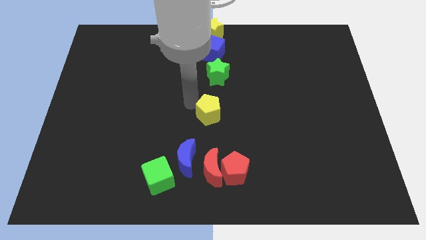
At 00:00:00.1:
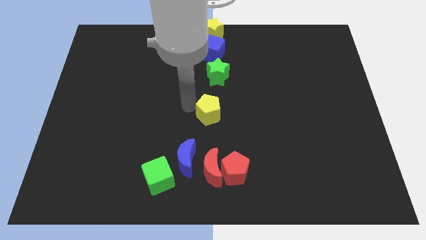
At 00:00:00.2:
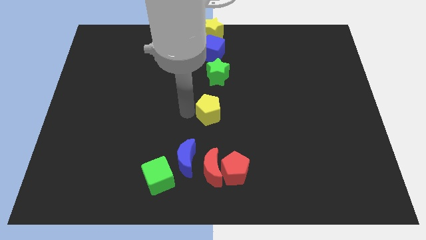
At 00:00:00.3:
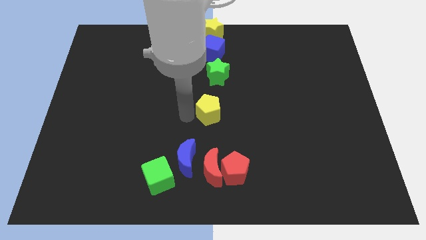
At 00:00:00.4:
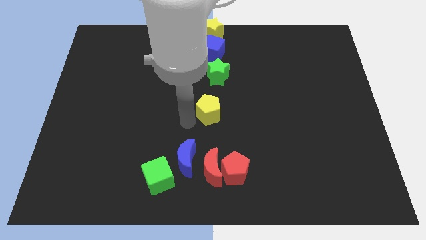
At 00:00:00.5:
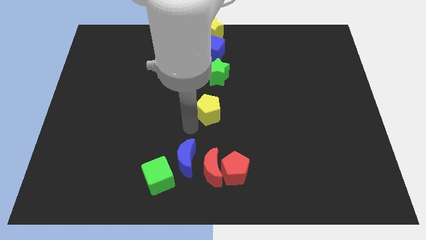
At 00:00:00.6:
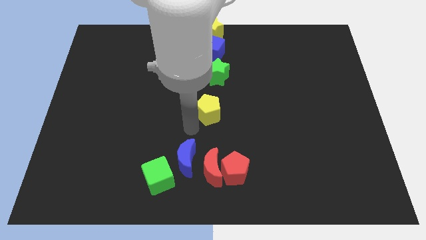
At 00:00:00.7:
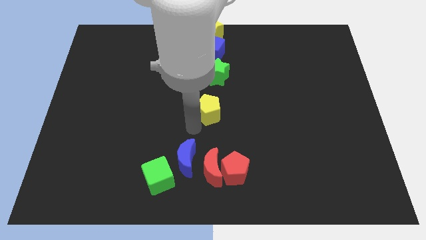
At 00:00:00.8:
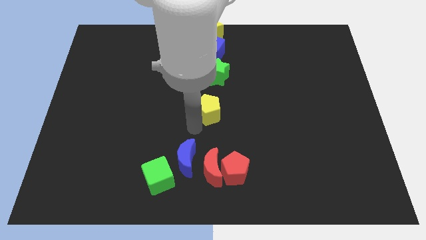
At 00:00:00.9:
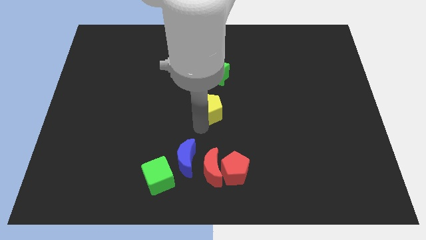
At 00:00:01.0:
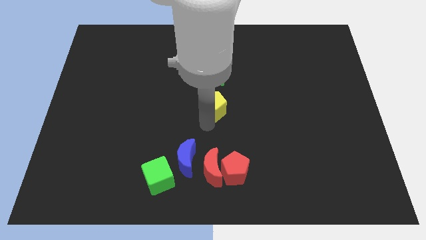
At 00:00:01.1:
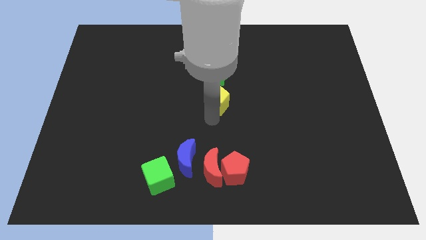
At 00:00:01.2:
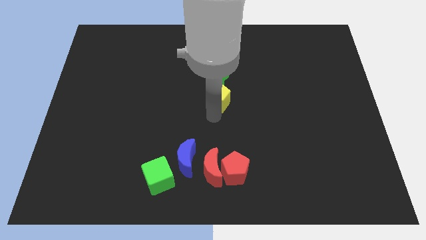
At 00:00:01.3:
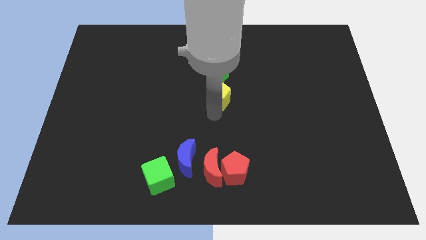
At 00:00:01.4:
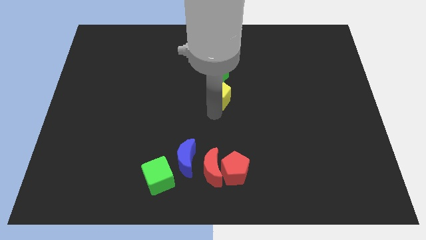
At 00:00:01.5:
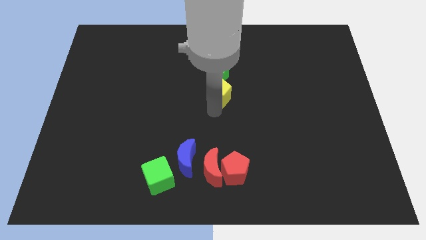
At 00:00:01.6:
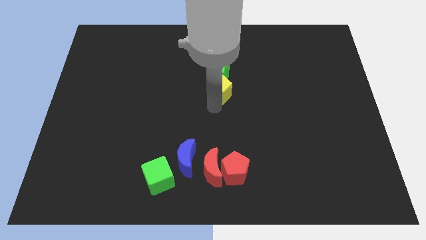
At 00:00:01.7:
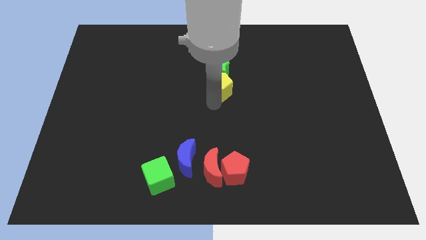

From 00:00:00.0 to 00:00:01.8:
push the yellow pentagon close to the green star

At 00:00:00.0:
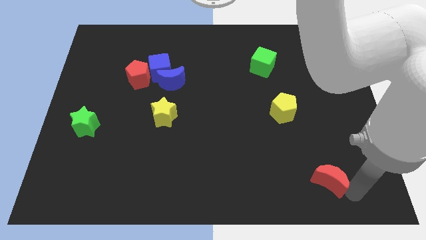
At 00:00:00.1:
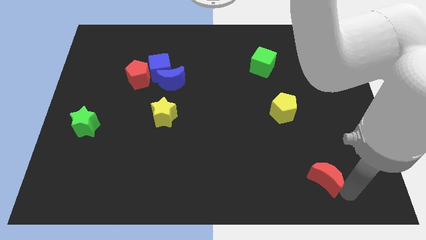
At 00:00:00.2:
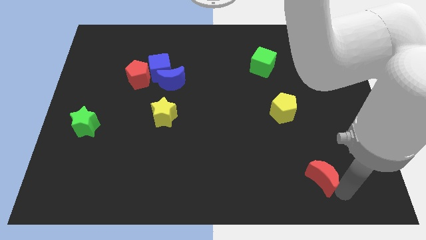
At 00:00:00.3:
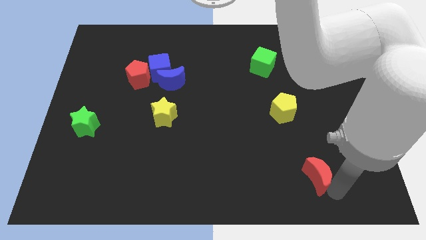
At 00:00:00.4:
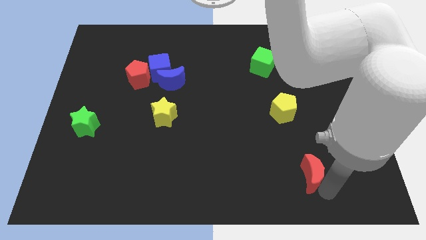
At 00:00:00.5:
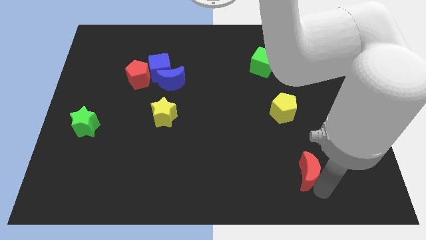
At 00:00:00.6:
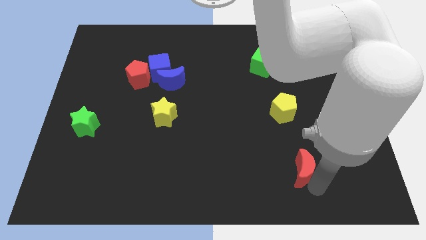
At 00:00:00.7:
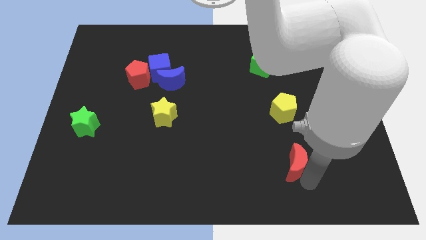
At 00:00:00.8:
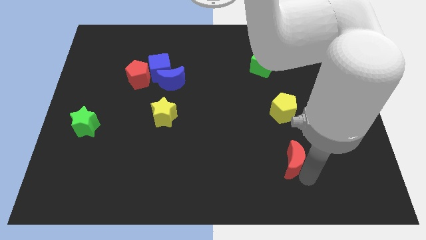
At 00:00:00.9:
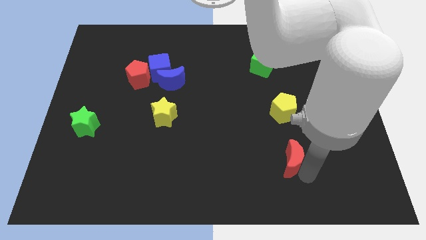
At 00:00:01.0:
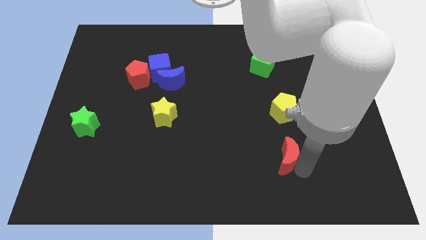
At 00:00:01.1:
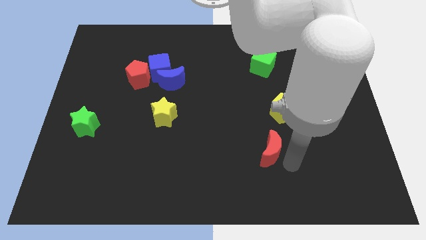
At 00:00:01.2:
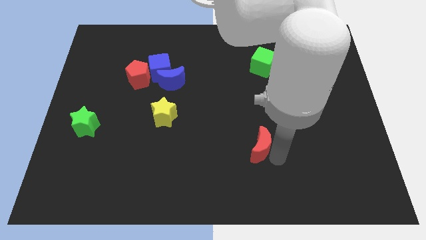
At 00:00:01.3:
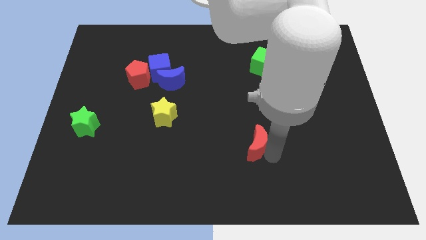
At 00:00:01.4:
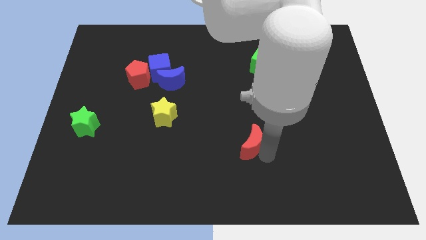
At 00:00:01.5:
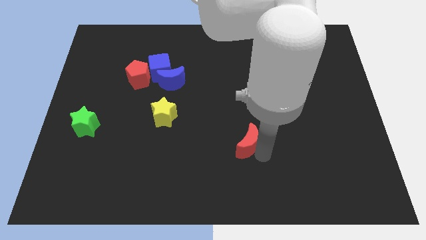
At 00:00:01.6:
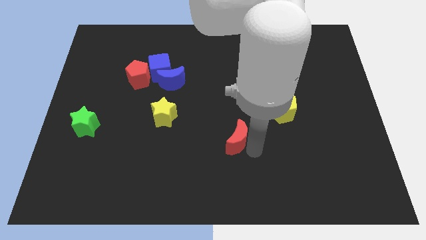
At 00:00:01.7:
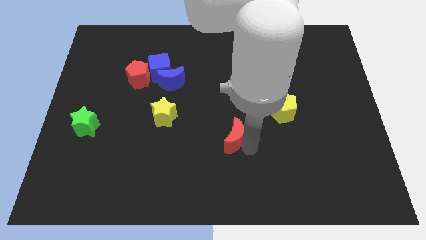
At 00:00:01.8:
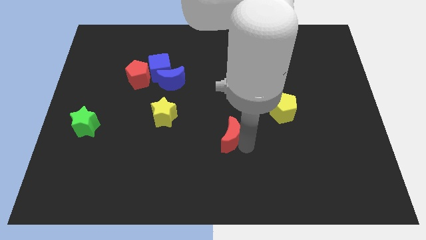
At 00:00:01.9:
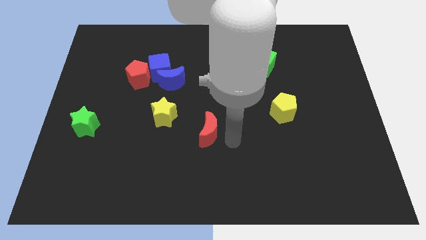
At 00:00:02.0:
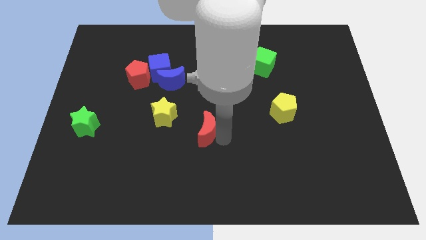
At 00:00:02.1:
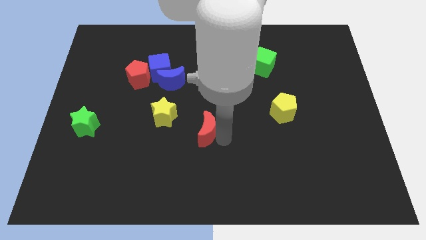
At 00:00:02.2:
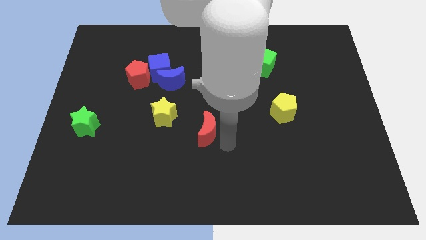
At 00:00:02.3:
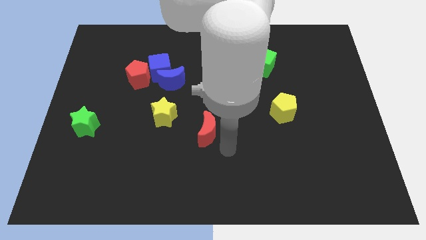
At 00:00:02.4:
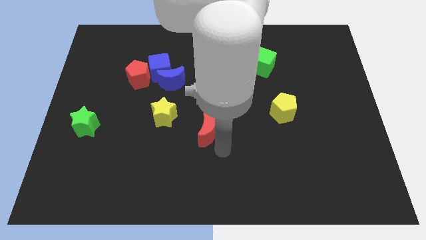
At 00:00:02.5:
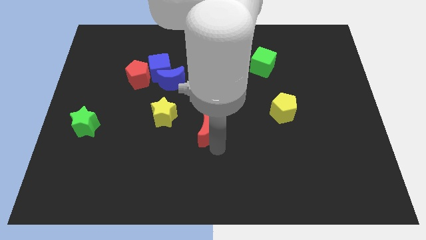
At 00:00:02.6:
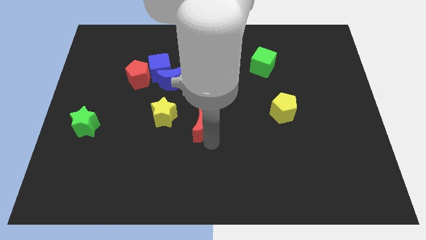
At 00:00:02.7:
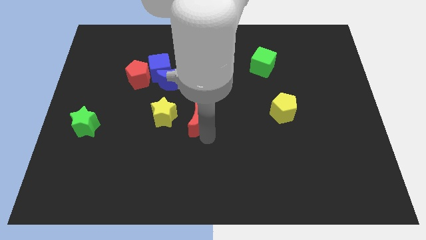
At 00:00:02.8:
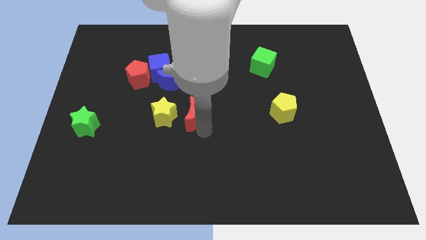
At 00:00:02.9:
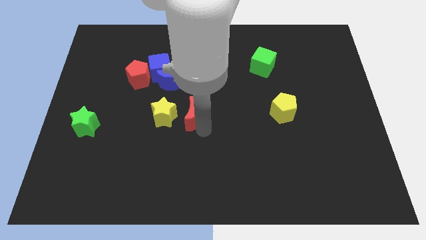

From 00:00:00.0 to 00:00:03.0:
place red moon to the right of yellow star

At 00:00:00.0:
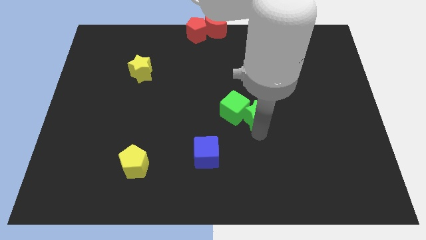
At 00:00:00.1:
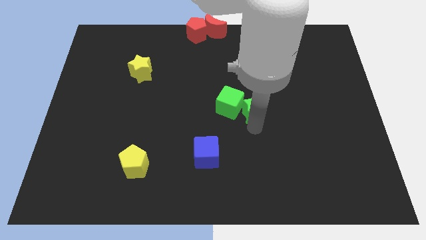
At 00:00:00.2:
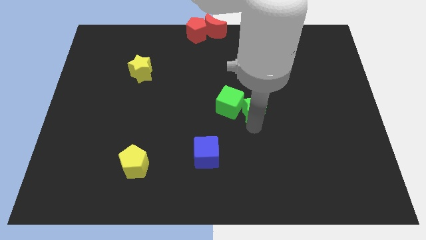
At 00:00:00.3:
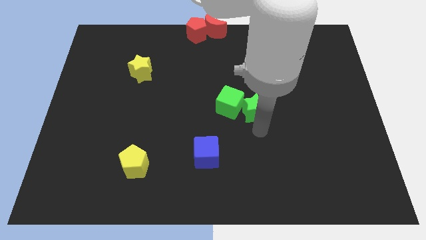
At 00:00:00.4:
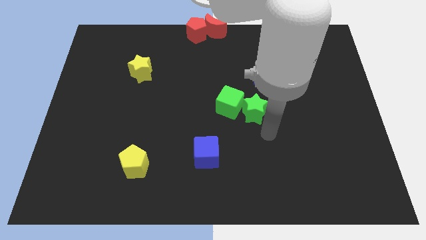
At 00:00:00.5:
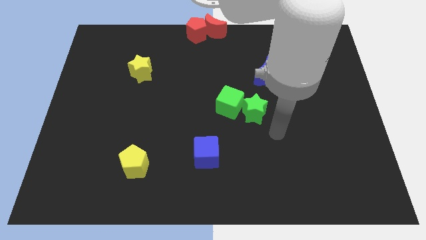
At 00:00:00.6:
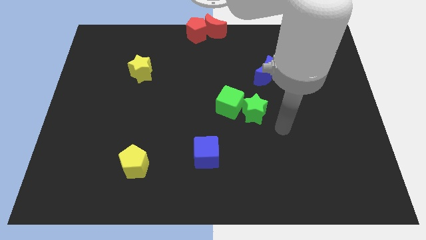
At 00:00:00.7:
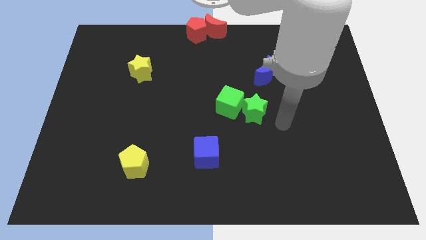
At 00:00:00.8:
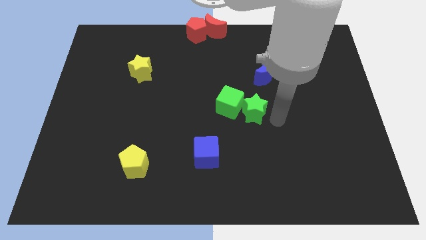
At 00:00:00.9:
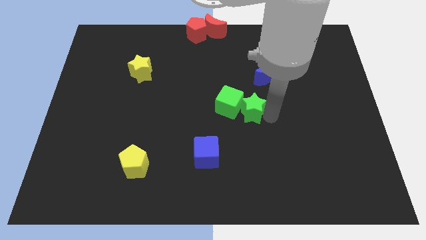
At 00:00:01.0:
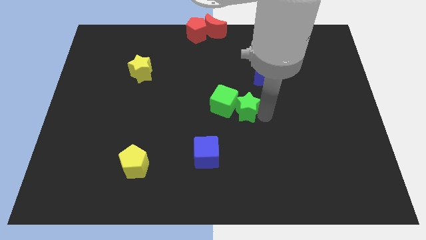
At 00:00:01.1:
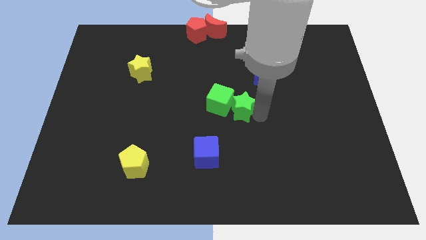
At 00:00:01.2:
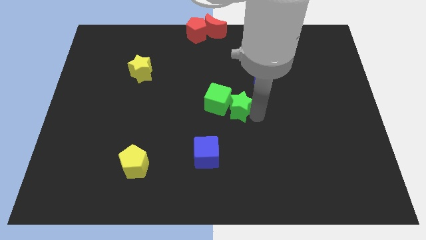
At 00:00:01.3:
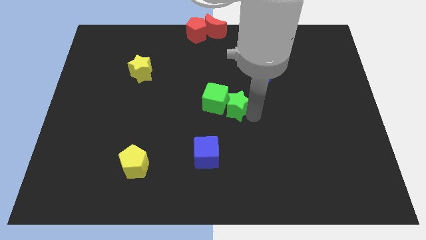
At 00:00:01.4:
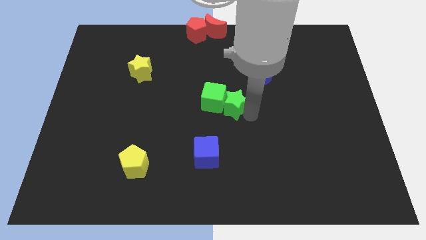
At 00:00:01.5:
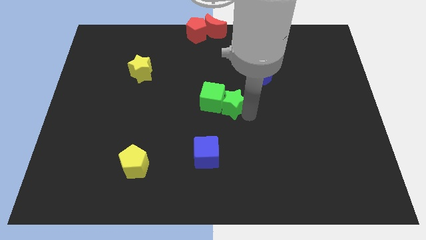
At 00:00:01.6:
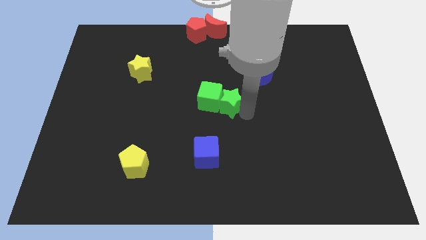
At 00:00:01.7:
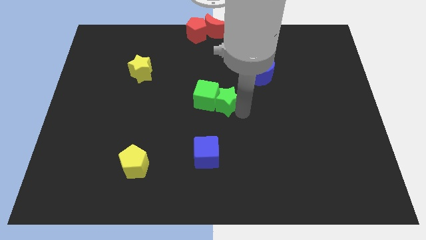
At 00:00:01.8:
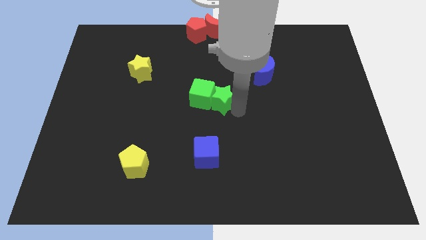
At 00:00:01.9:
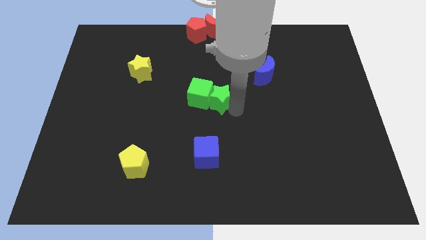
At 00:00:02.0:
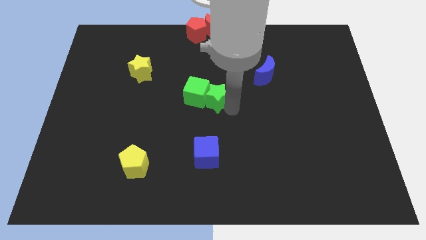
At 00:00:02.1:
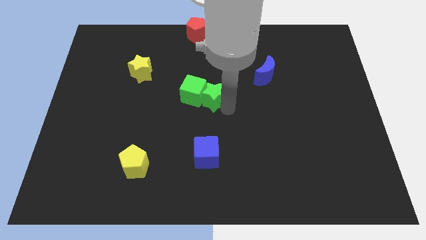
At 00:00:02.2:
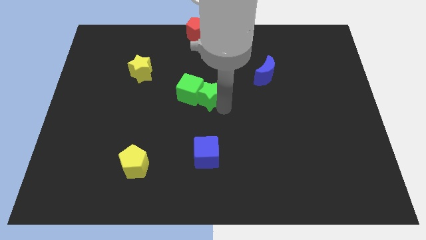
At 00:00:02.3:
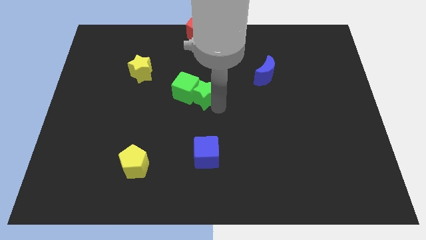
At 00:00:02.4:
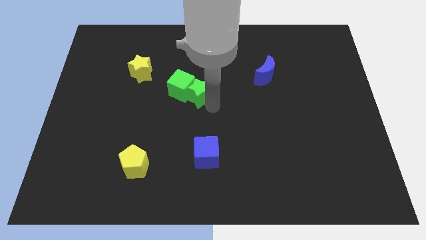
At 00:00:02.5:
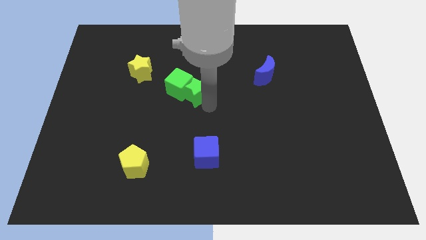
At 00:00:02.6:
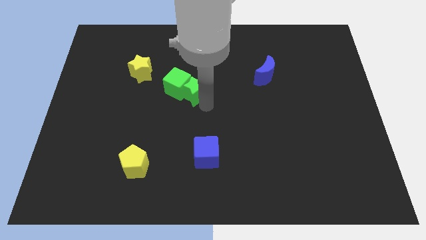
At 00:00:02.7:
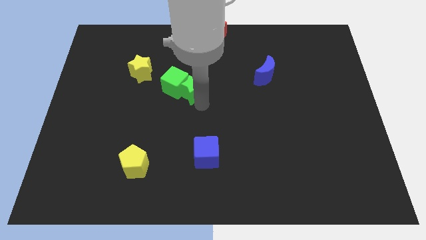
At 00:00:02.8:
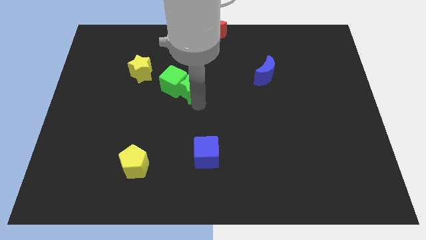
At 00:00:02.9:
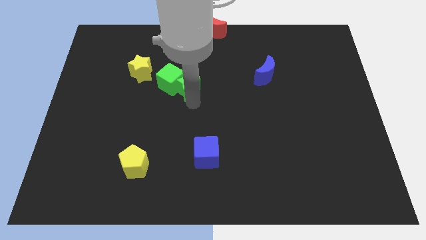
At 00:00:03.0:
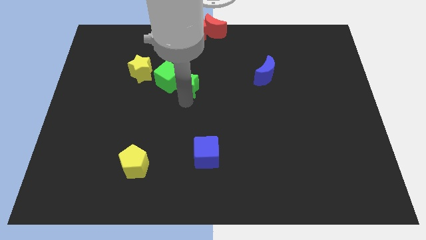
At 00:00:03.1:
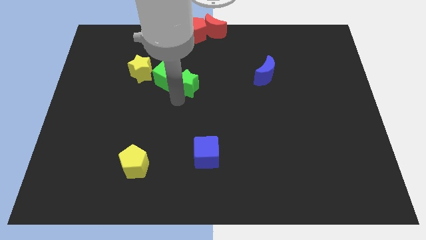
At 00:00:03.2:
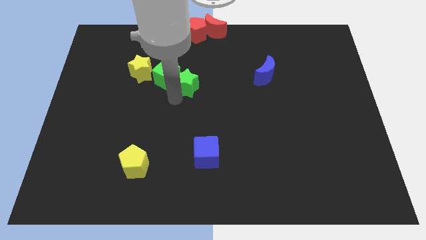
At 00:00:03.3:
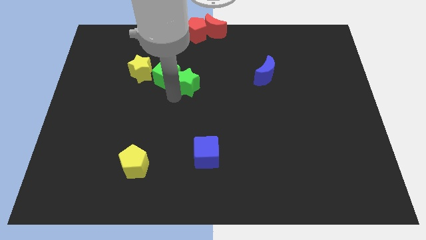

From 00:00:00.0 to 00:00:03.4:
move green blocks right below the yellow star

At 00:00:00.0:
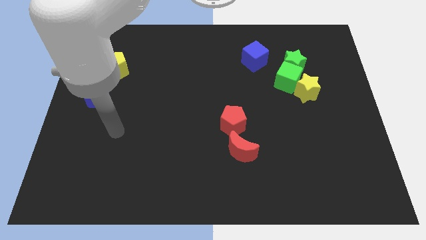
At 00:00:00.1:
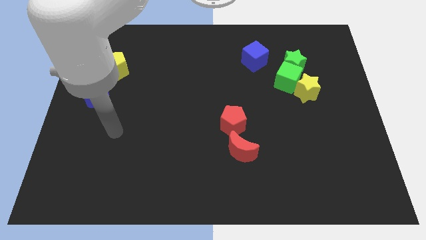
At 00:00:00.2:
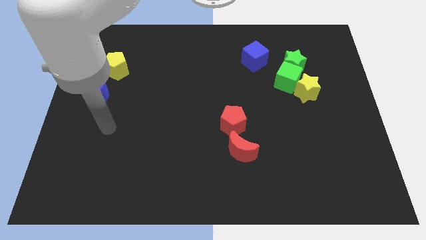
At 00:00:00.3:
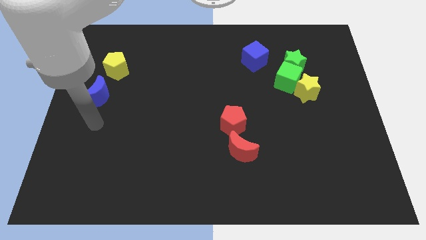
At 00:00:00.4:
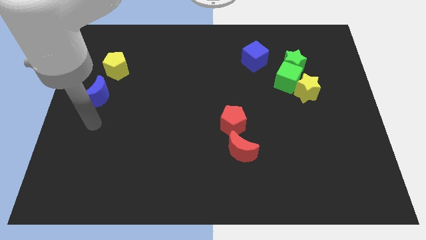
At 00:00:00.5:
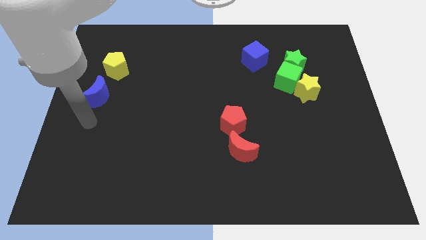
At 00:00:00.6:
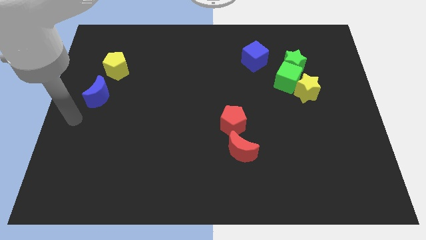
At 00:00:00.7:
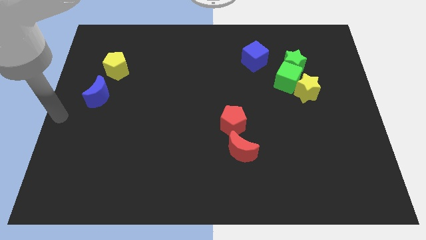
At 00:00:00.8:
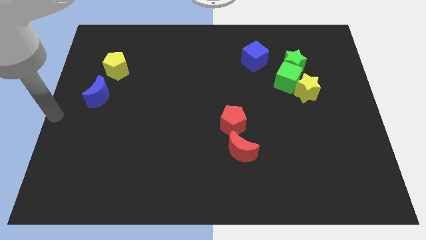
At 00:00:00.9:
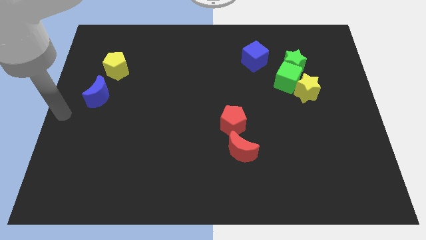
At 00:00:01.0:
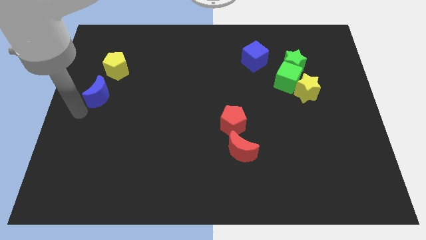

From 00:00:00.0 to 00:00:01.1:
point your arm at the bottom of the blue crescent
